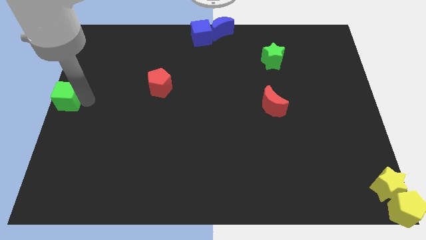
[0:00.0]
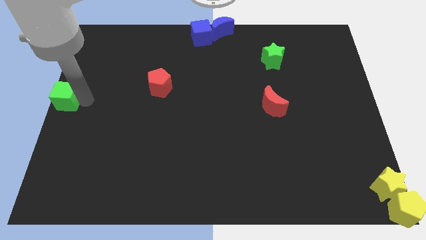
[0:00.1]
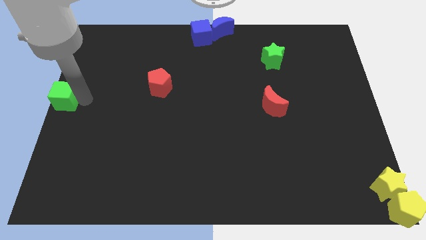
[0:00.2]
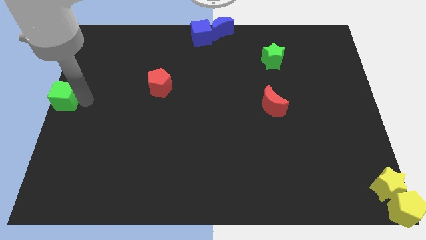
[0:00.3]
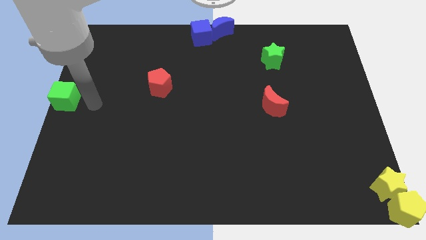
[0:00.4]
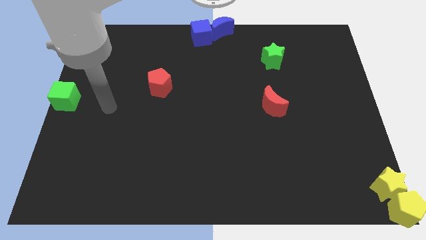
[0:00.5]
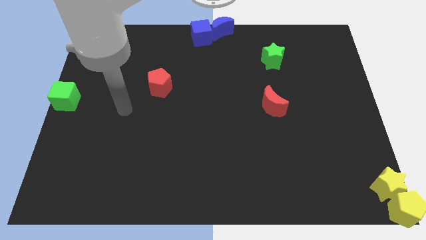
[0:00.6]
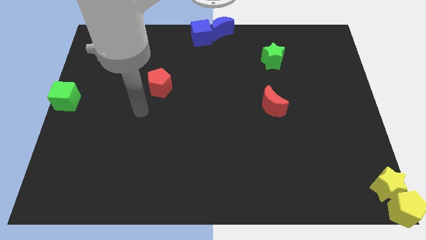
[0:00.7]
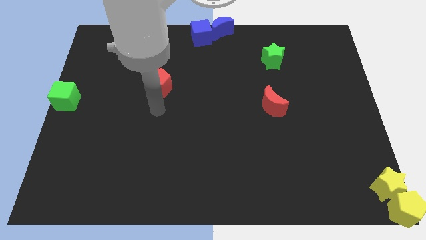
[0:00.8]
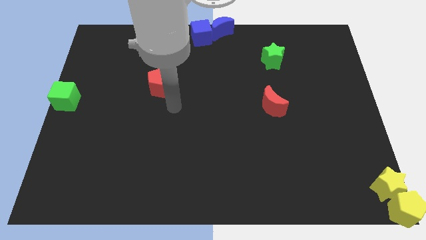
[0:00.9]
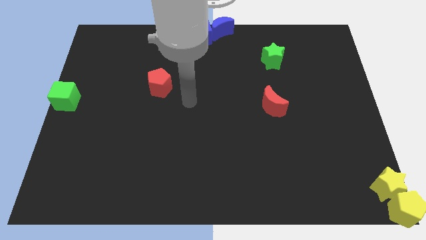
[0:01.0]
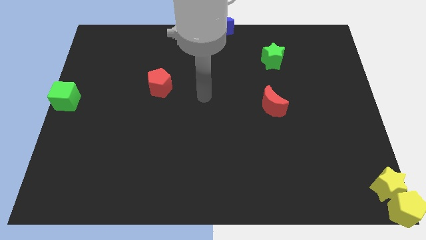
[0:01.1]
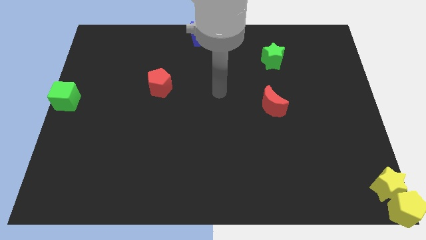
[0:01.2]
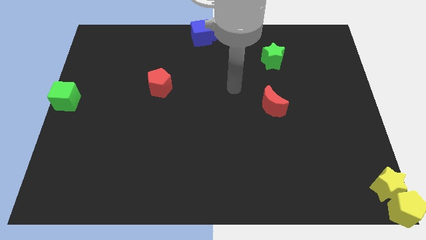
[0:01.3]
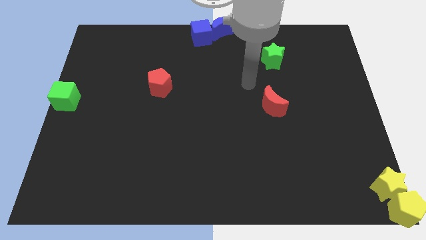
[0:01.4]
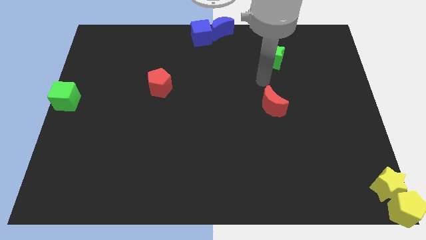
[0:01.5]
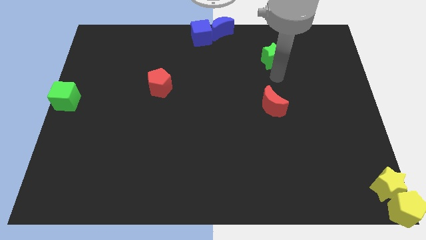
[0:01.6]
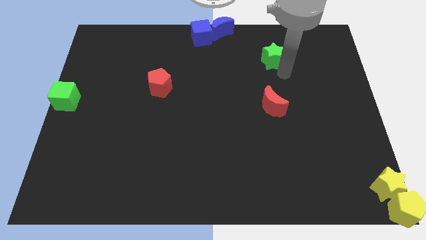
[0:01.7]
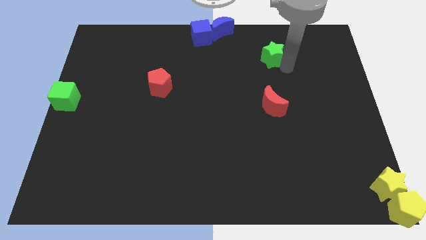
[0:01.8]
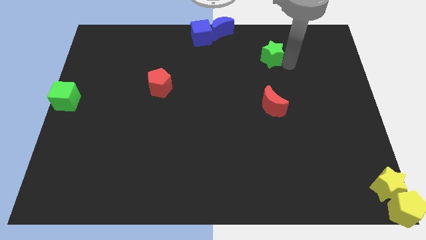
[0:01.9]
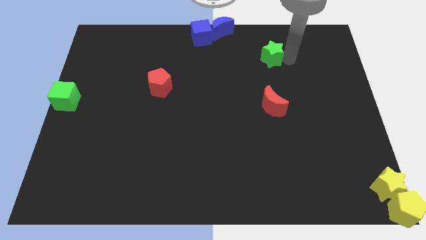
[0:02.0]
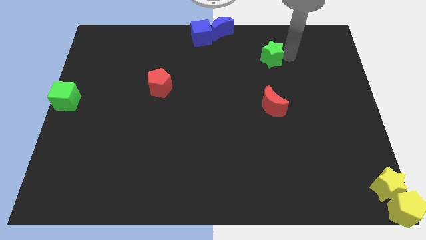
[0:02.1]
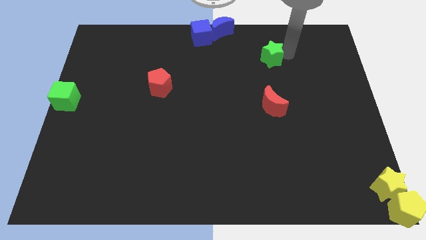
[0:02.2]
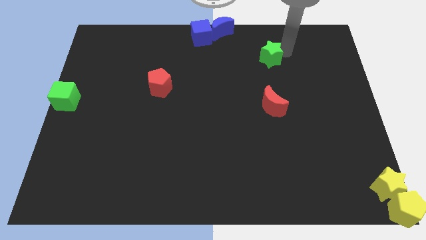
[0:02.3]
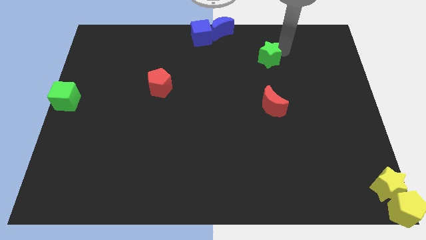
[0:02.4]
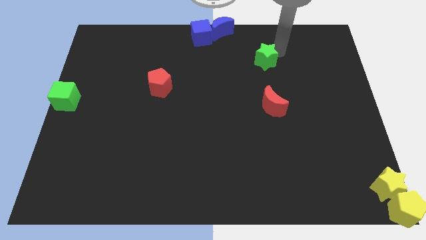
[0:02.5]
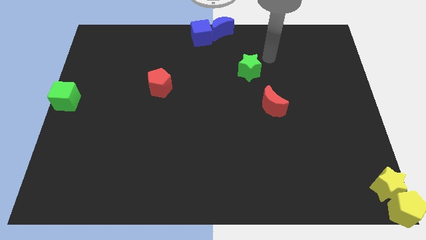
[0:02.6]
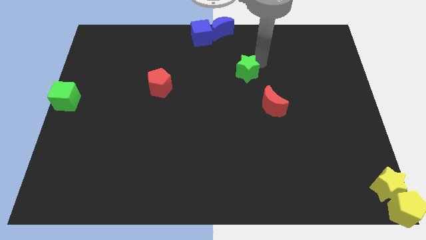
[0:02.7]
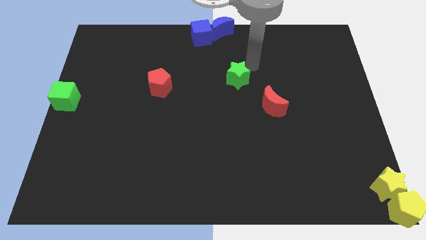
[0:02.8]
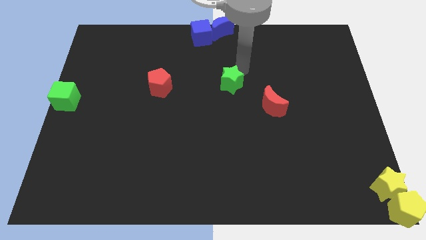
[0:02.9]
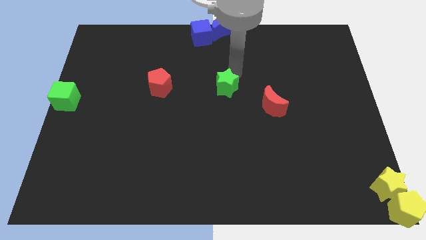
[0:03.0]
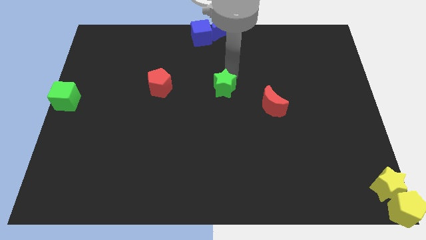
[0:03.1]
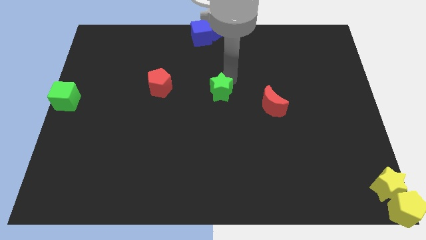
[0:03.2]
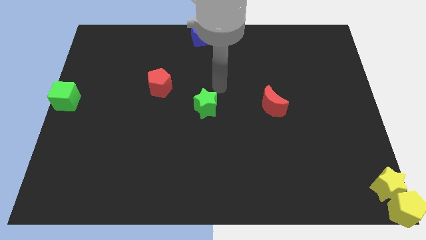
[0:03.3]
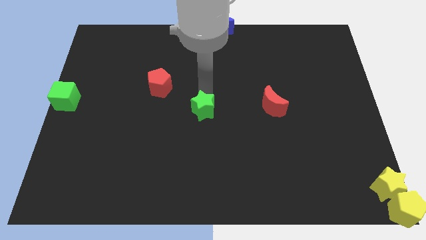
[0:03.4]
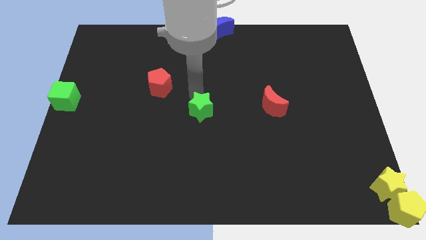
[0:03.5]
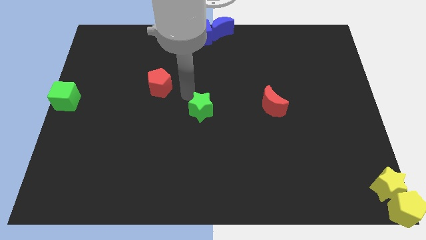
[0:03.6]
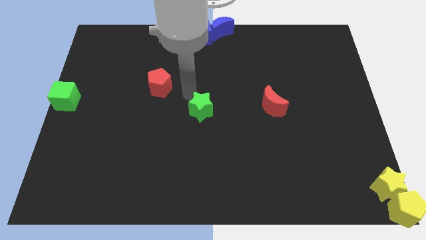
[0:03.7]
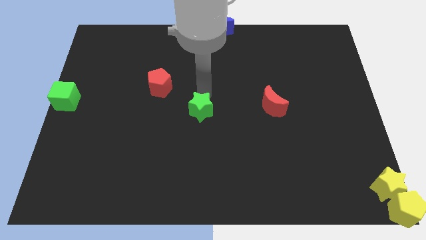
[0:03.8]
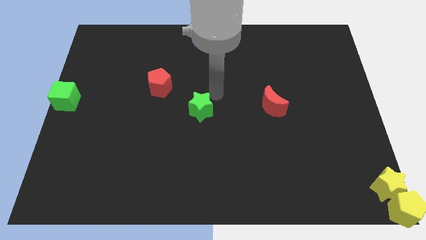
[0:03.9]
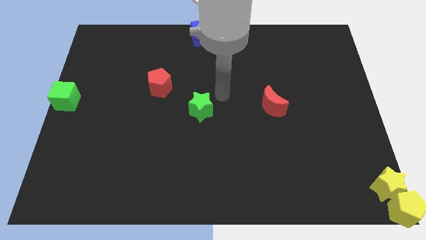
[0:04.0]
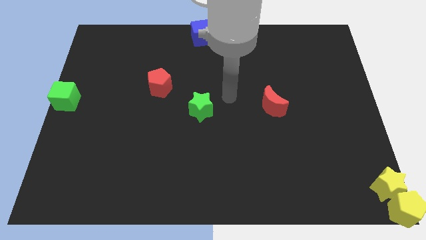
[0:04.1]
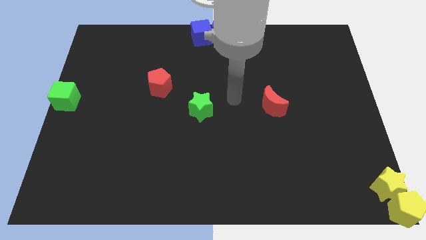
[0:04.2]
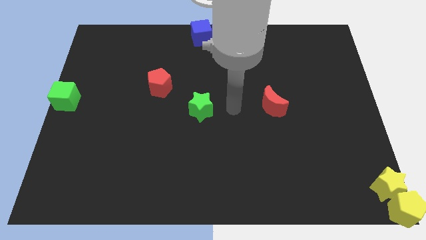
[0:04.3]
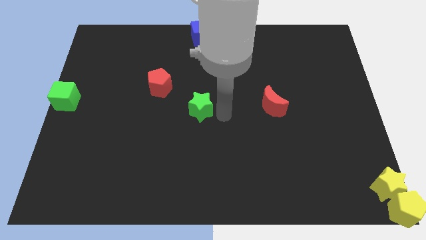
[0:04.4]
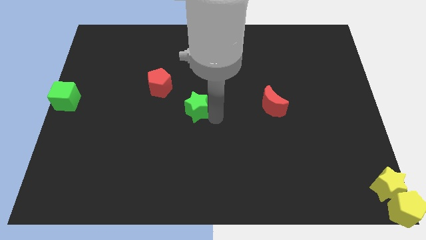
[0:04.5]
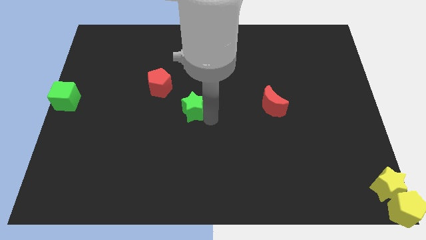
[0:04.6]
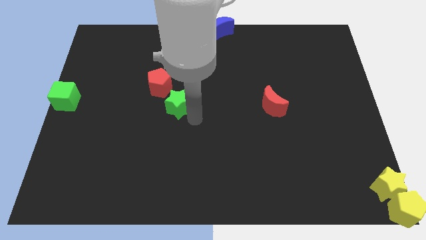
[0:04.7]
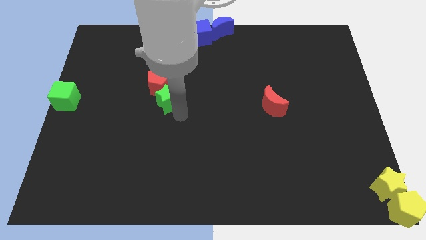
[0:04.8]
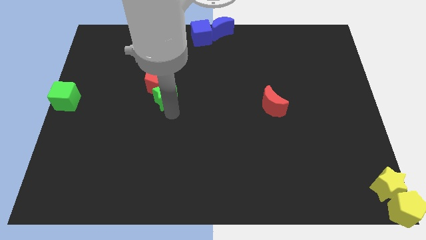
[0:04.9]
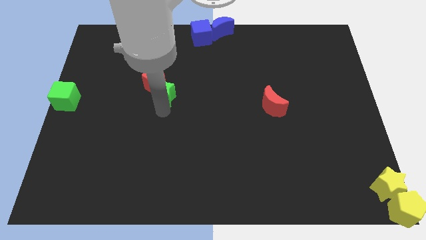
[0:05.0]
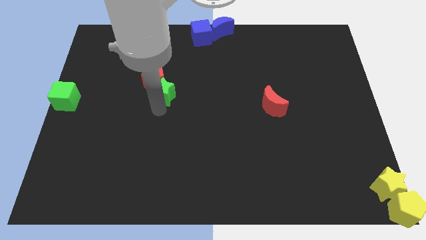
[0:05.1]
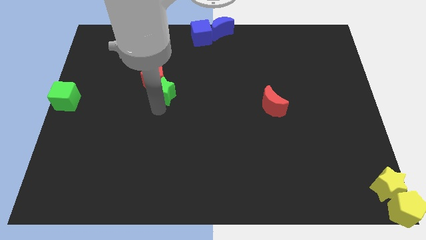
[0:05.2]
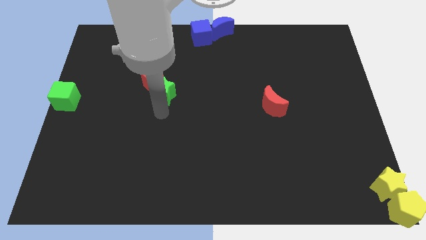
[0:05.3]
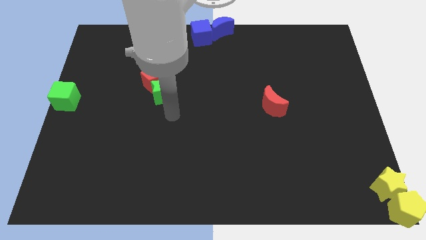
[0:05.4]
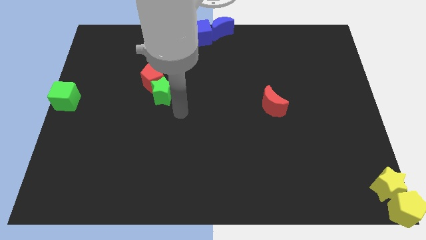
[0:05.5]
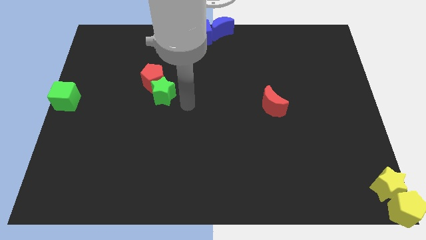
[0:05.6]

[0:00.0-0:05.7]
move green star to the bottom of red pentagon

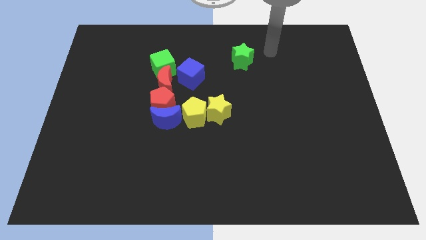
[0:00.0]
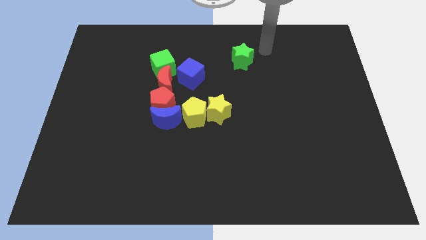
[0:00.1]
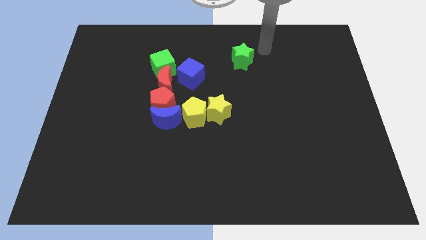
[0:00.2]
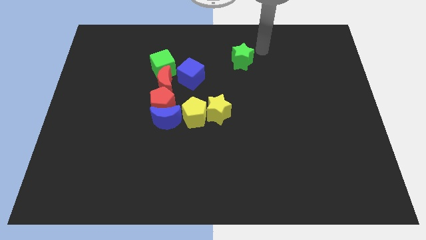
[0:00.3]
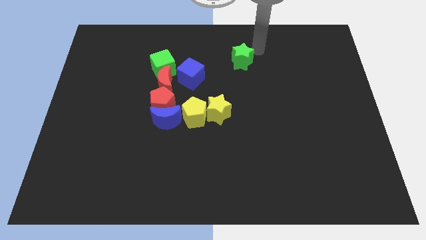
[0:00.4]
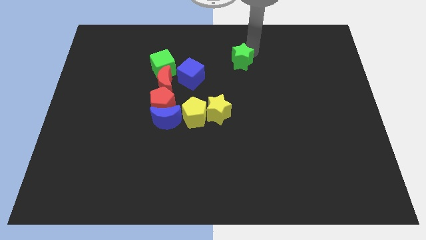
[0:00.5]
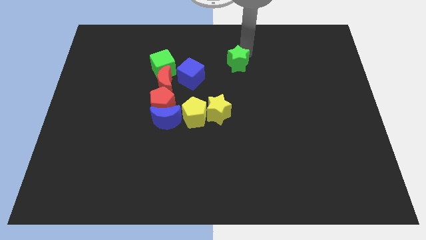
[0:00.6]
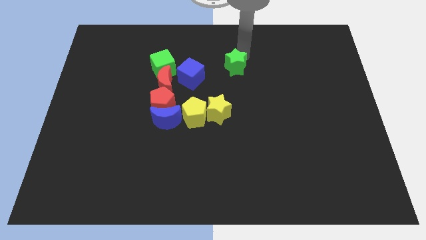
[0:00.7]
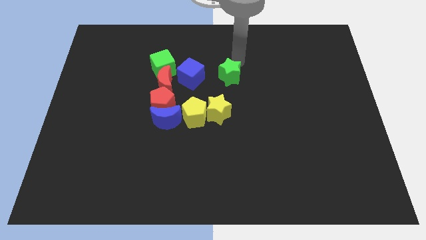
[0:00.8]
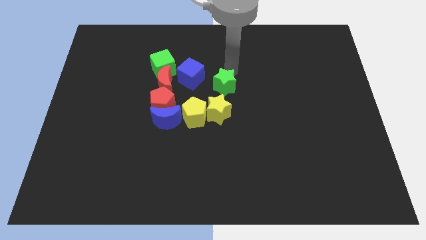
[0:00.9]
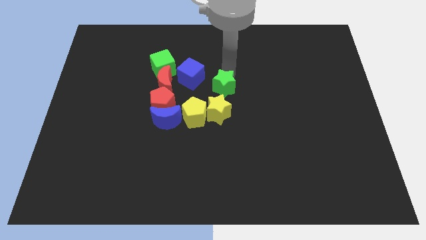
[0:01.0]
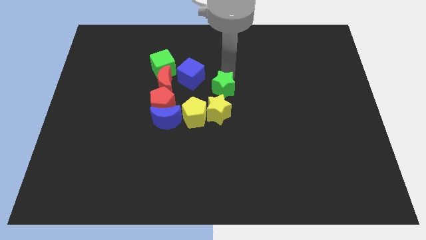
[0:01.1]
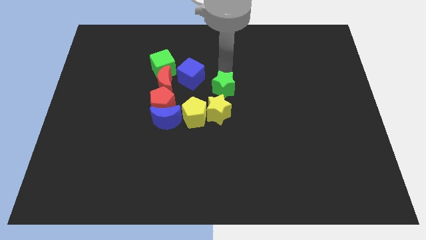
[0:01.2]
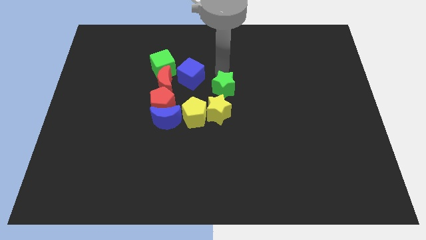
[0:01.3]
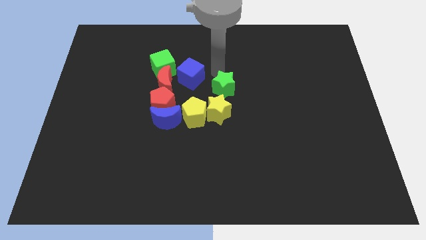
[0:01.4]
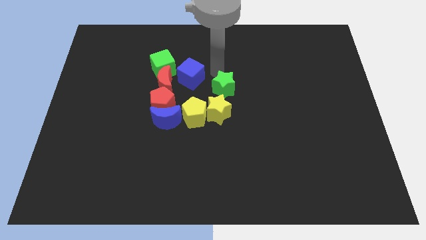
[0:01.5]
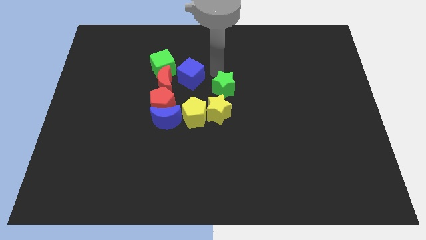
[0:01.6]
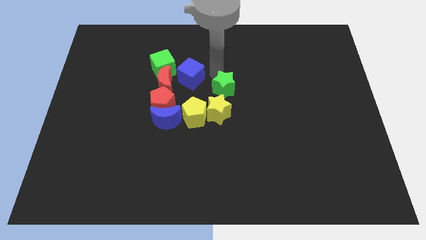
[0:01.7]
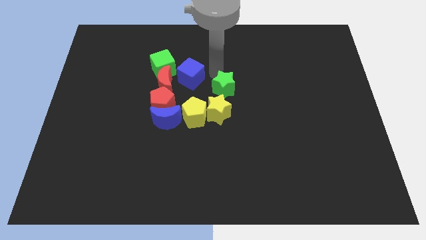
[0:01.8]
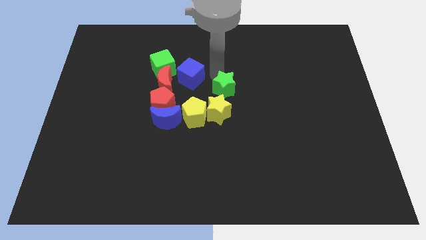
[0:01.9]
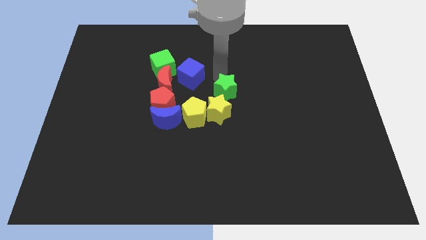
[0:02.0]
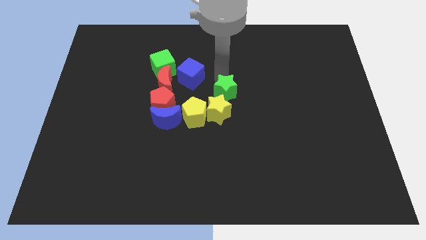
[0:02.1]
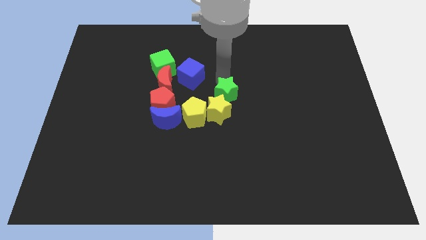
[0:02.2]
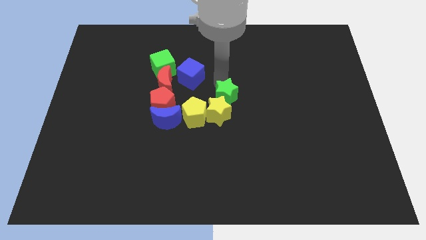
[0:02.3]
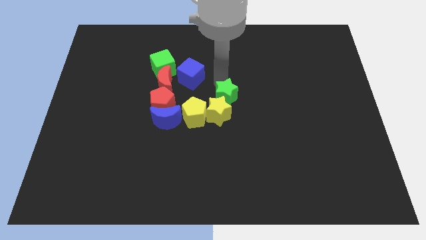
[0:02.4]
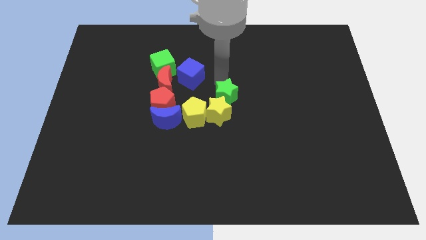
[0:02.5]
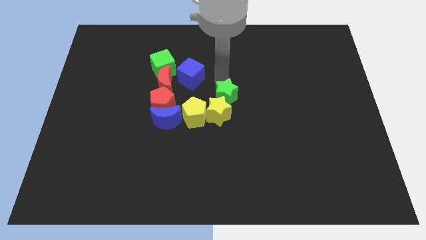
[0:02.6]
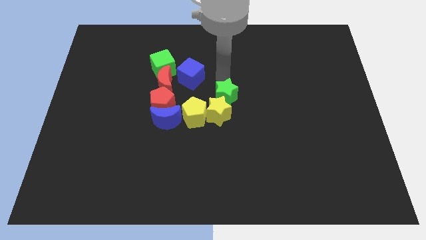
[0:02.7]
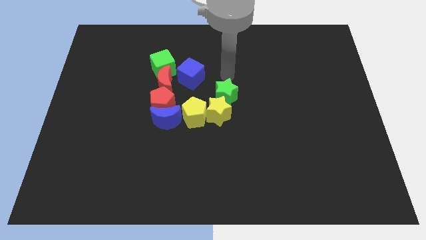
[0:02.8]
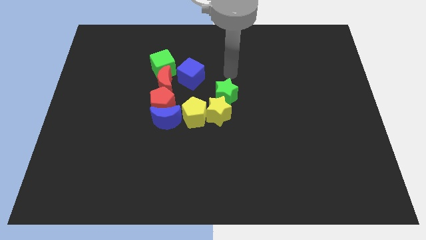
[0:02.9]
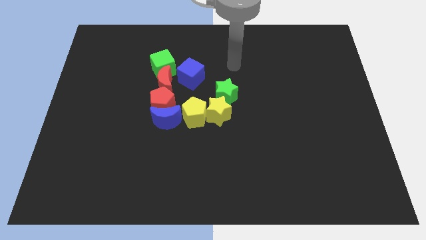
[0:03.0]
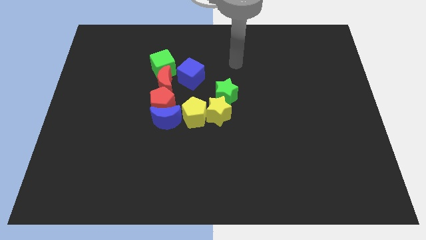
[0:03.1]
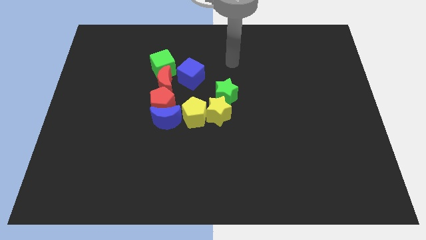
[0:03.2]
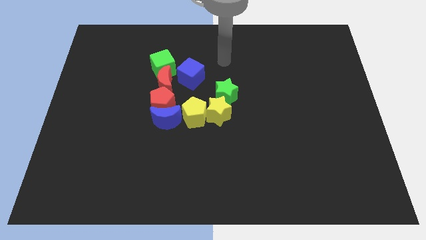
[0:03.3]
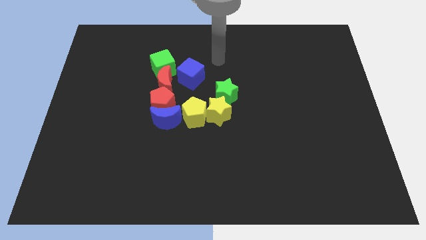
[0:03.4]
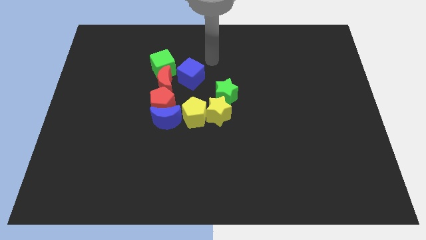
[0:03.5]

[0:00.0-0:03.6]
move the green star to the top of the yellow star
